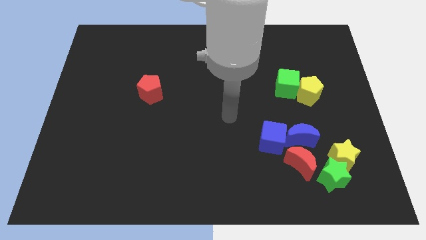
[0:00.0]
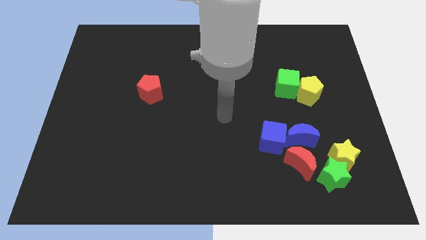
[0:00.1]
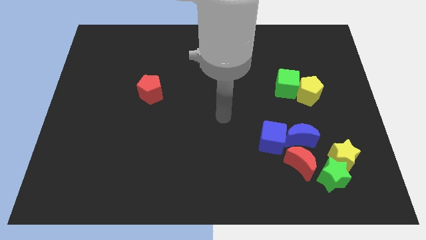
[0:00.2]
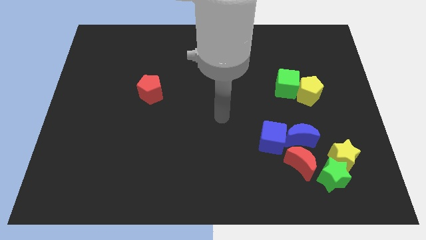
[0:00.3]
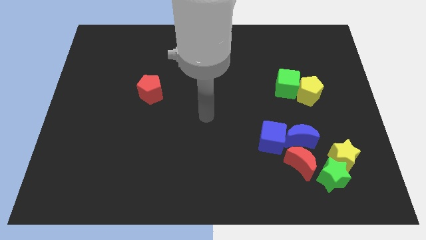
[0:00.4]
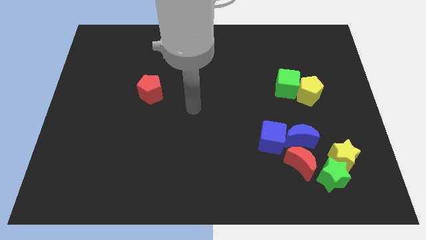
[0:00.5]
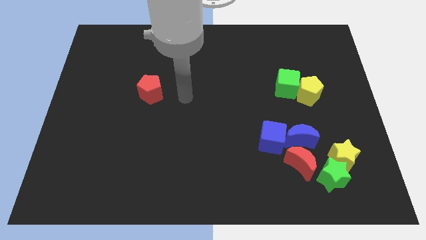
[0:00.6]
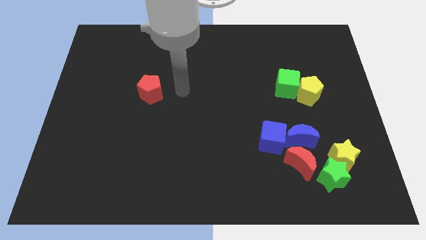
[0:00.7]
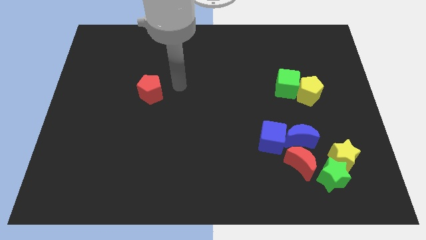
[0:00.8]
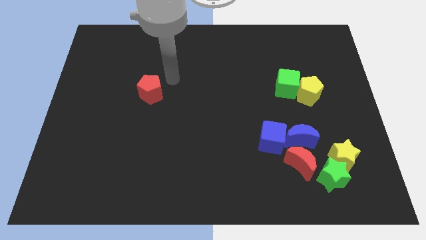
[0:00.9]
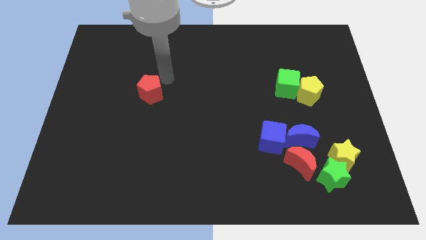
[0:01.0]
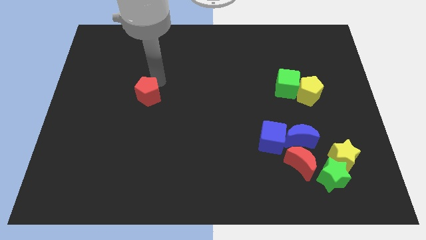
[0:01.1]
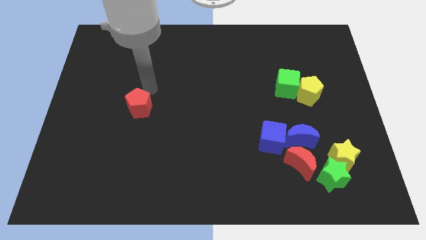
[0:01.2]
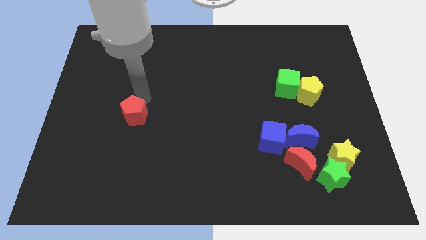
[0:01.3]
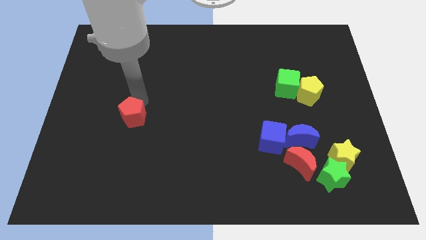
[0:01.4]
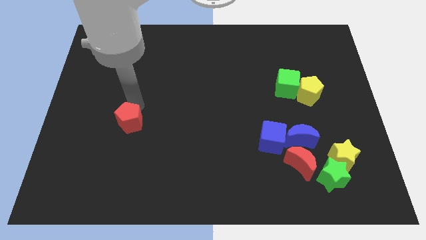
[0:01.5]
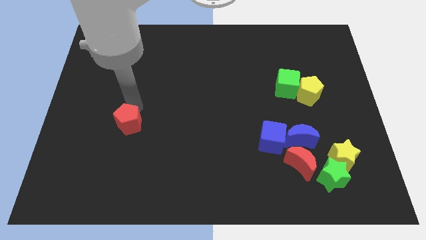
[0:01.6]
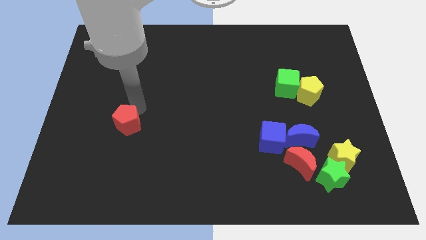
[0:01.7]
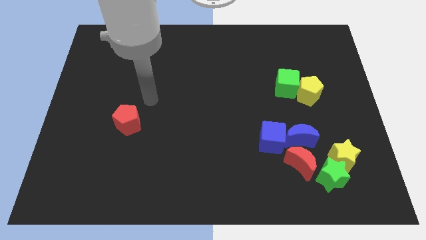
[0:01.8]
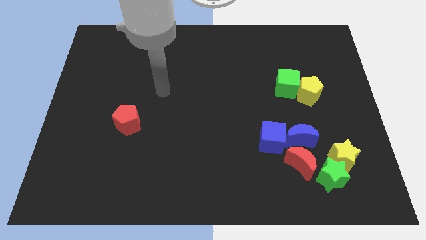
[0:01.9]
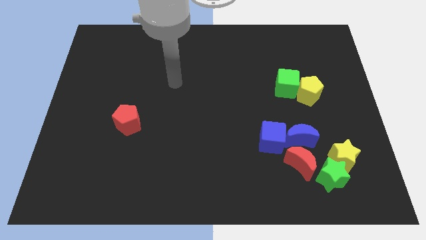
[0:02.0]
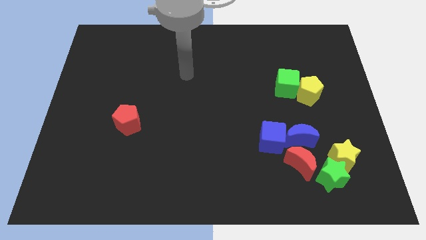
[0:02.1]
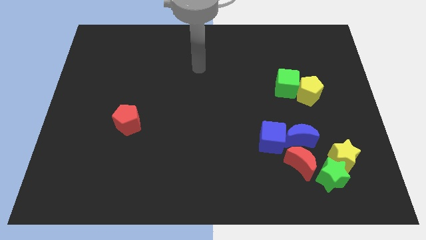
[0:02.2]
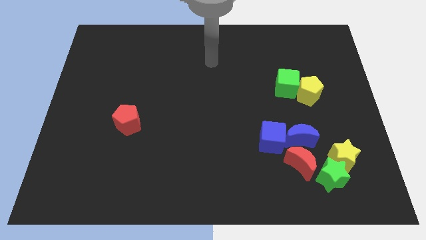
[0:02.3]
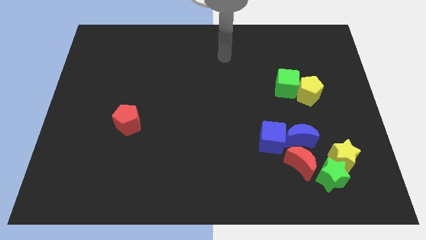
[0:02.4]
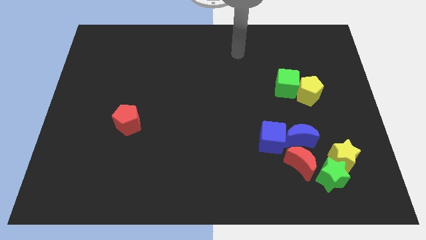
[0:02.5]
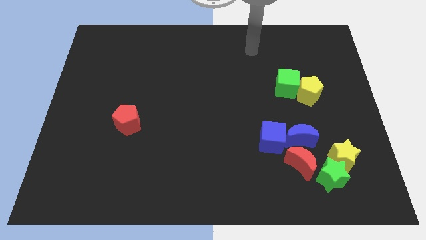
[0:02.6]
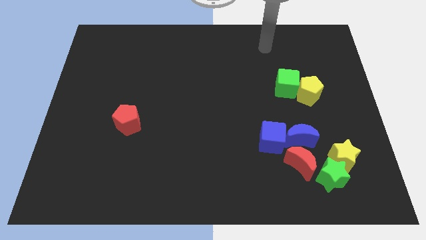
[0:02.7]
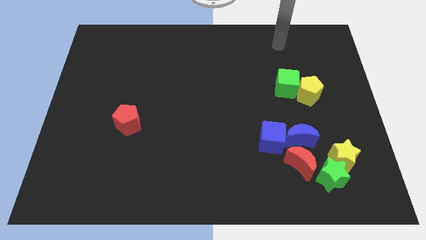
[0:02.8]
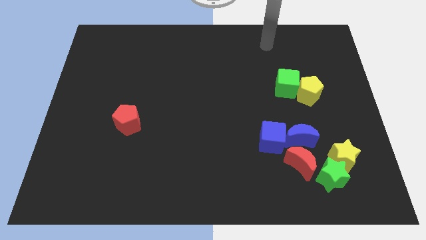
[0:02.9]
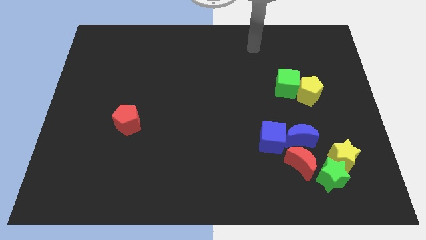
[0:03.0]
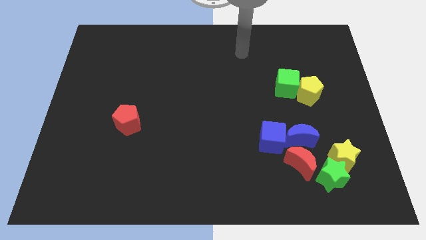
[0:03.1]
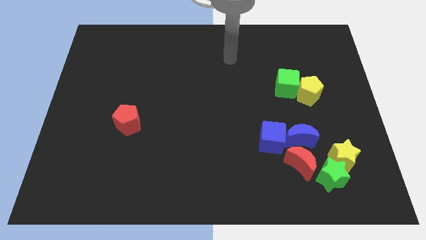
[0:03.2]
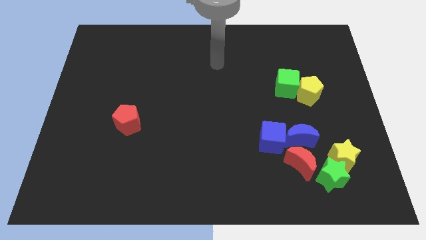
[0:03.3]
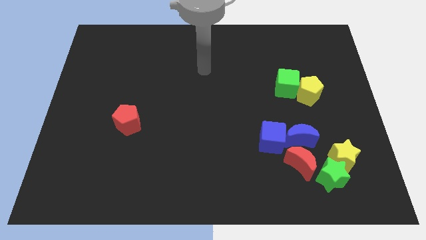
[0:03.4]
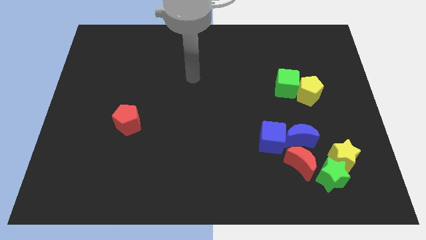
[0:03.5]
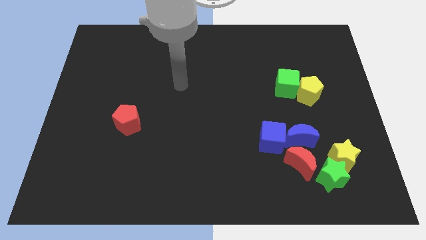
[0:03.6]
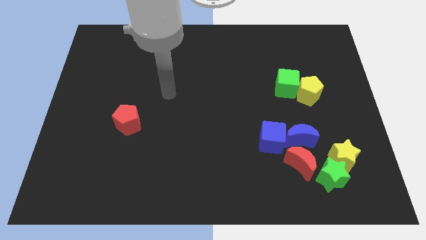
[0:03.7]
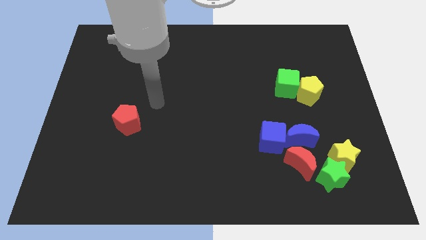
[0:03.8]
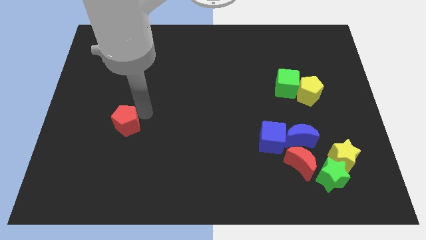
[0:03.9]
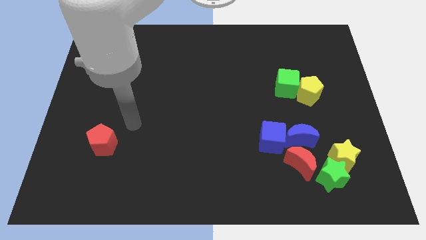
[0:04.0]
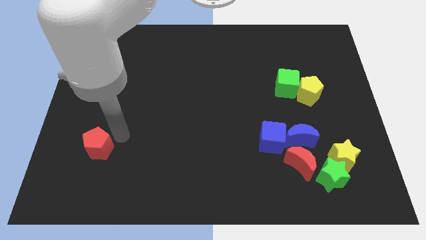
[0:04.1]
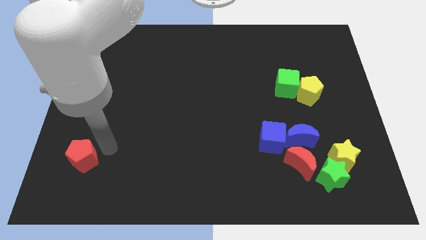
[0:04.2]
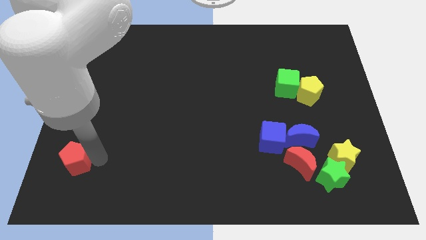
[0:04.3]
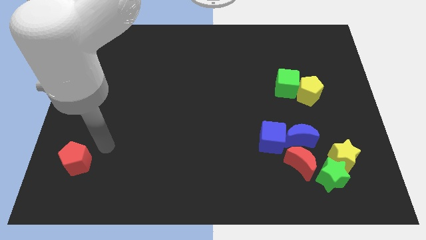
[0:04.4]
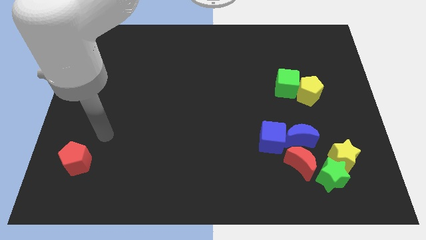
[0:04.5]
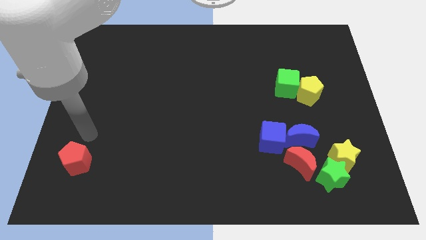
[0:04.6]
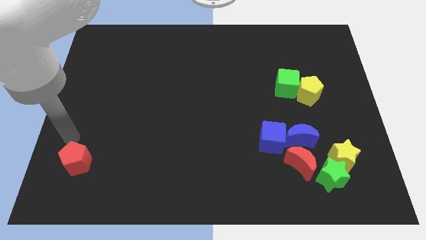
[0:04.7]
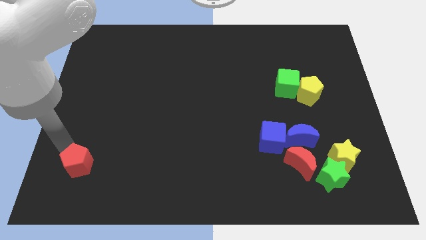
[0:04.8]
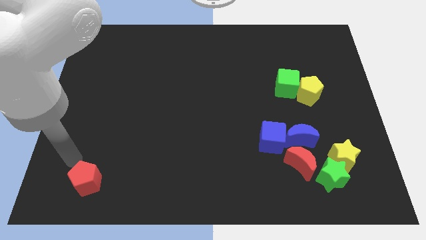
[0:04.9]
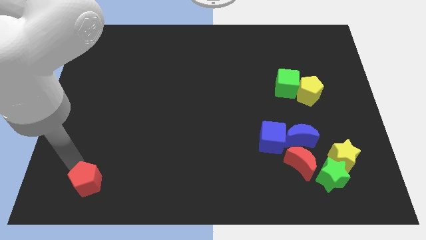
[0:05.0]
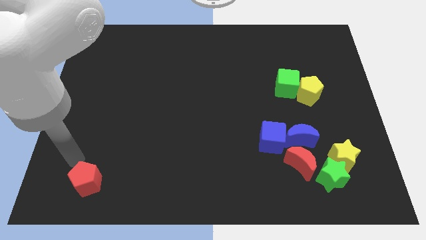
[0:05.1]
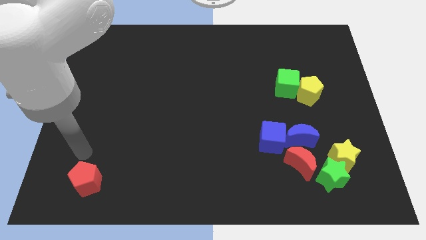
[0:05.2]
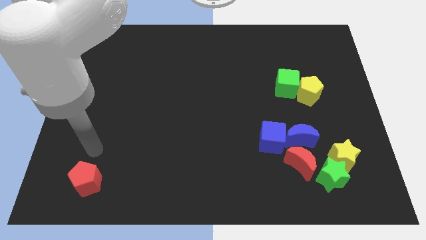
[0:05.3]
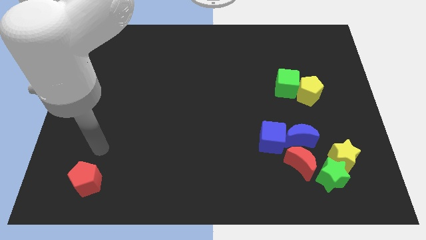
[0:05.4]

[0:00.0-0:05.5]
push the red pentagon towards the bottom

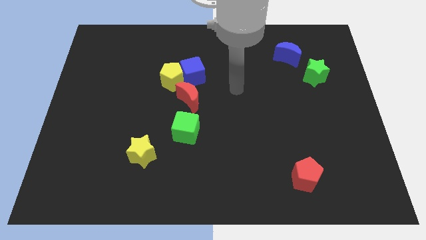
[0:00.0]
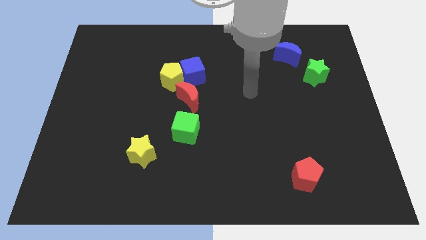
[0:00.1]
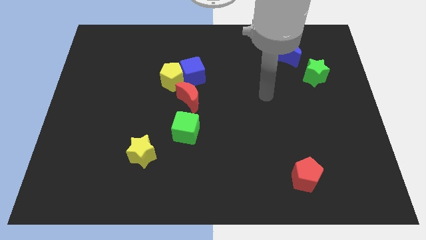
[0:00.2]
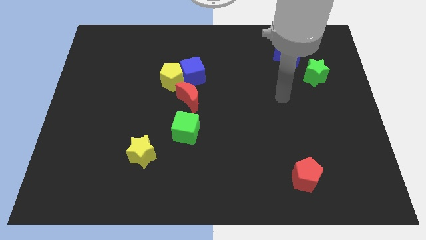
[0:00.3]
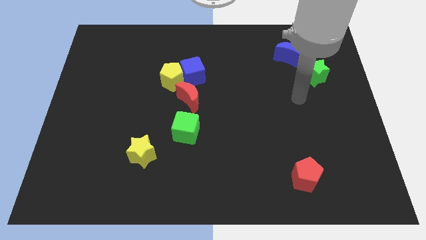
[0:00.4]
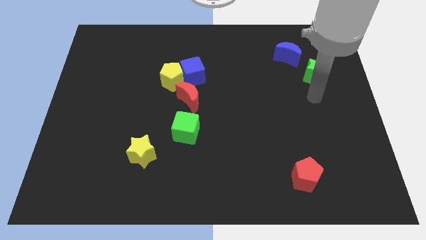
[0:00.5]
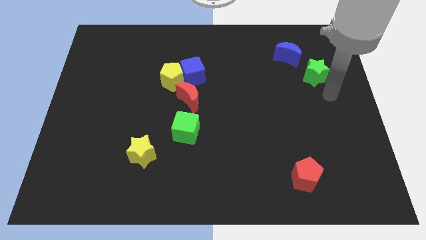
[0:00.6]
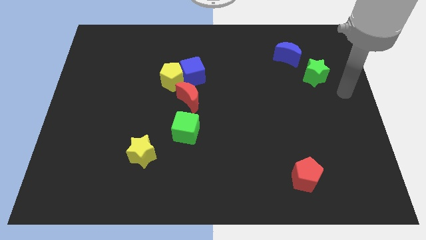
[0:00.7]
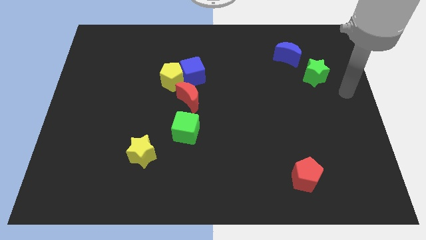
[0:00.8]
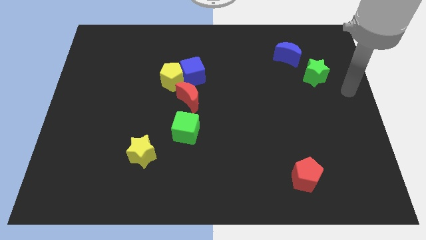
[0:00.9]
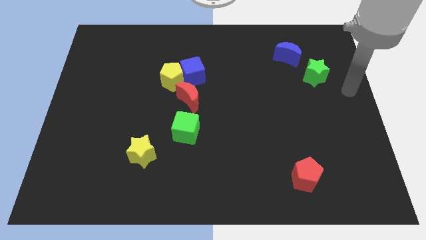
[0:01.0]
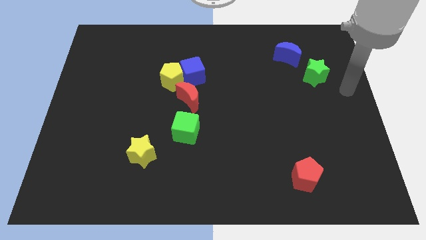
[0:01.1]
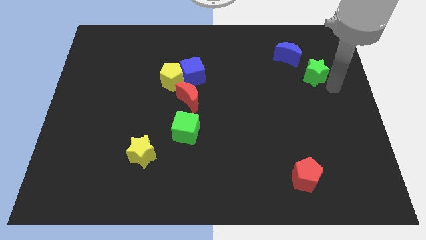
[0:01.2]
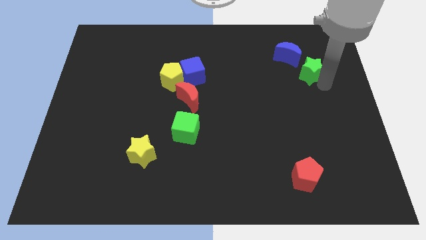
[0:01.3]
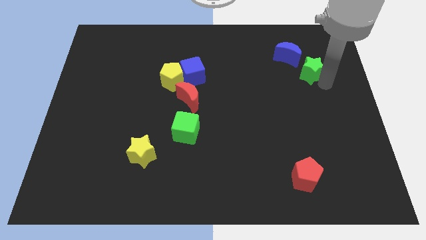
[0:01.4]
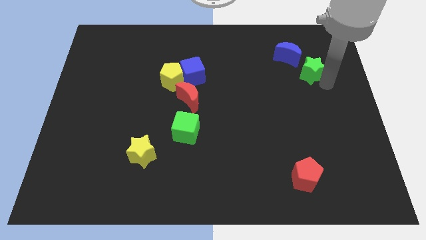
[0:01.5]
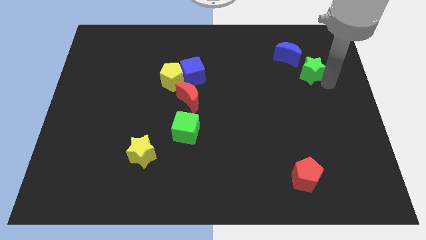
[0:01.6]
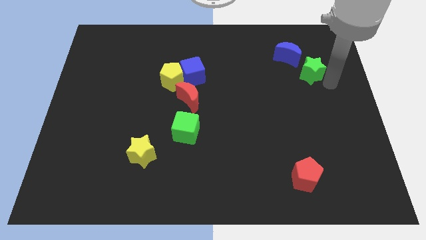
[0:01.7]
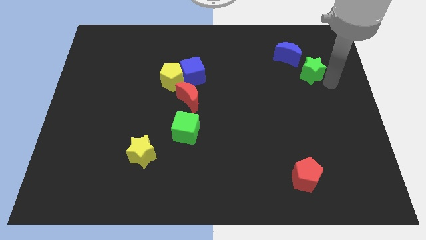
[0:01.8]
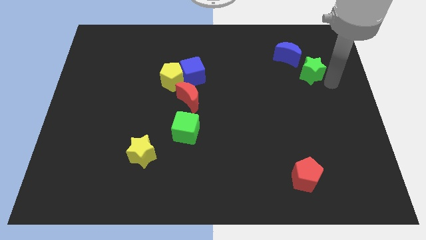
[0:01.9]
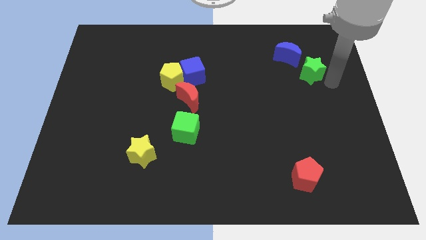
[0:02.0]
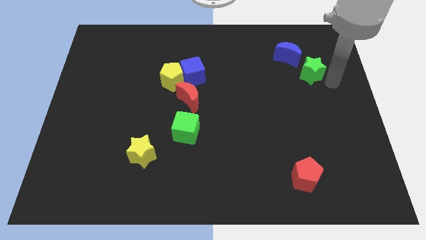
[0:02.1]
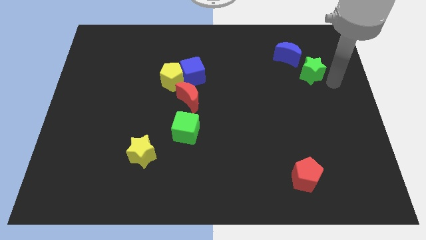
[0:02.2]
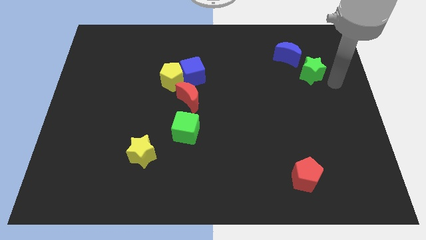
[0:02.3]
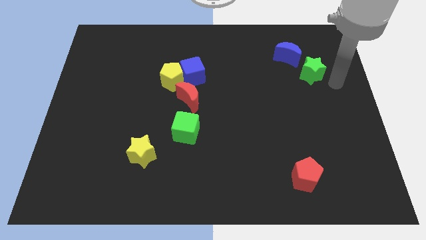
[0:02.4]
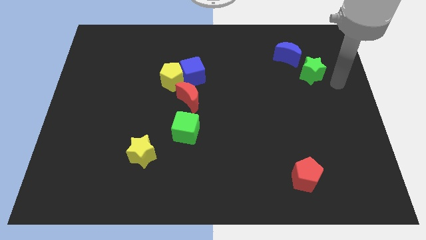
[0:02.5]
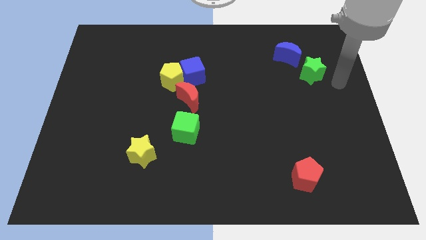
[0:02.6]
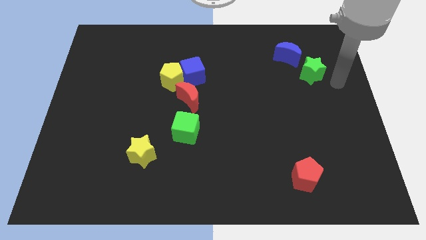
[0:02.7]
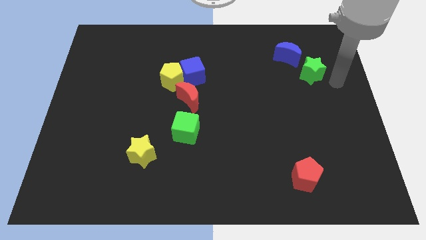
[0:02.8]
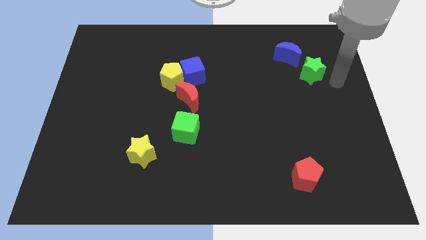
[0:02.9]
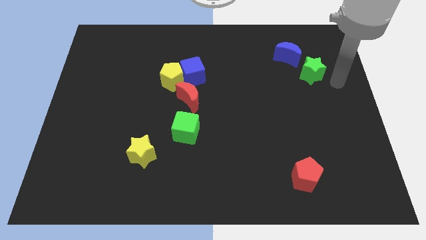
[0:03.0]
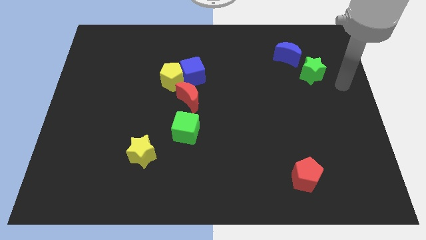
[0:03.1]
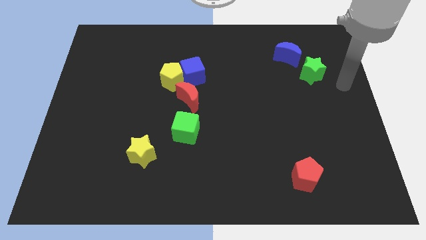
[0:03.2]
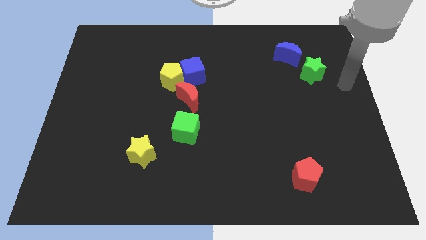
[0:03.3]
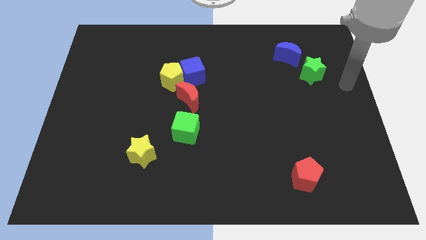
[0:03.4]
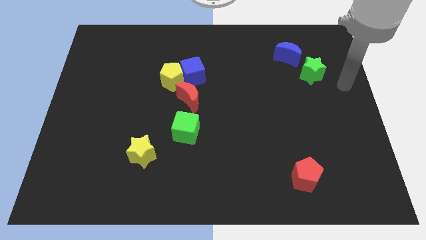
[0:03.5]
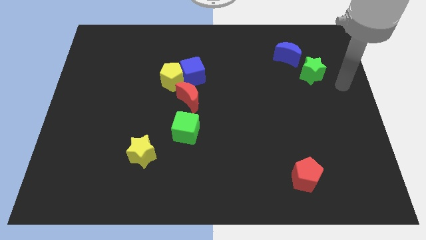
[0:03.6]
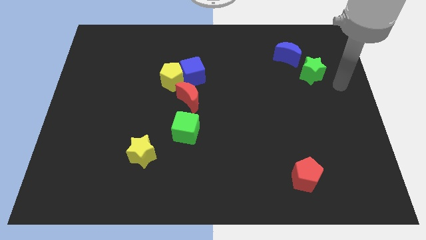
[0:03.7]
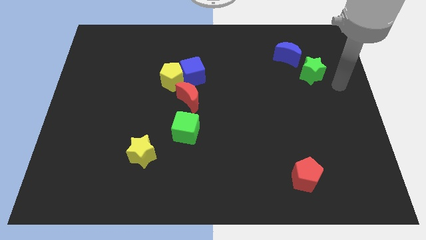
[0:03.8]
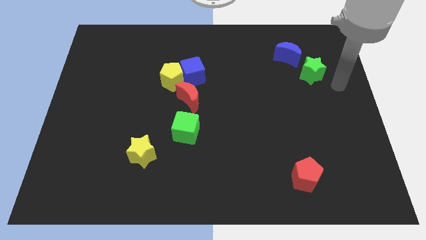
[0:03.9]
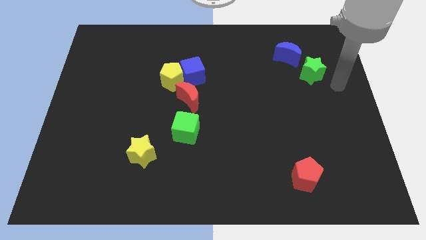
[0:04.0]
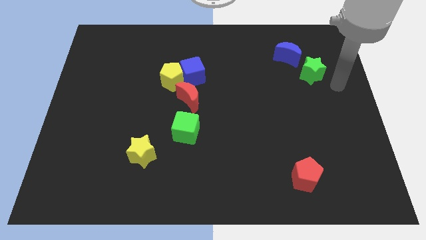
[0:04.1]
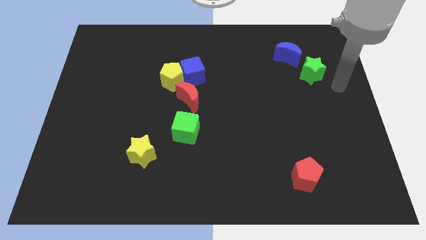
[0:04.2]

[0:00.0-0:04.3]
move your arm towards the green star
